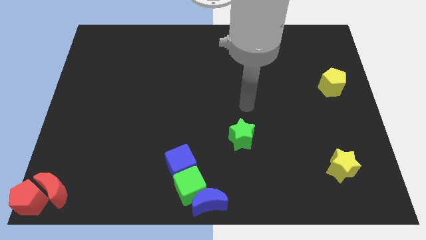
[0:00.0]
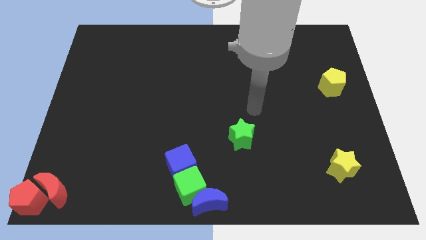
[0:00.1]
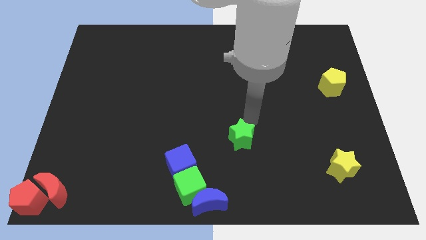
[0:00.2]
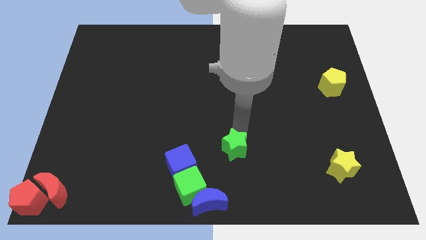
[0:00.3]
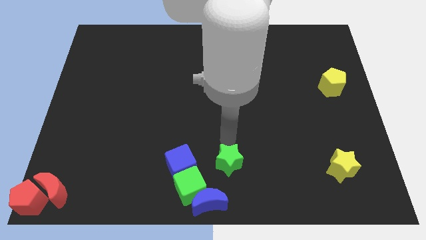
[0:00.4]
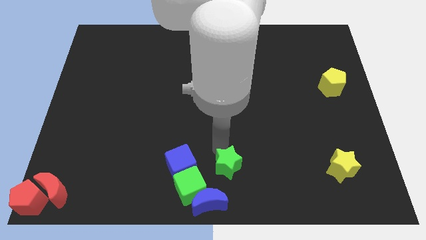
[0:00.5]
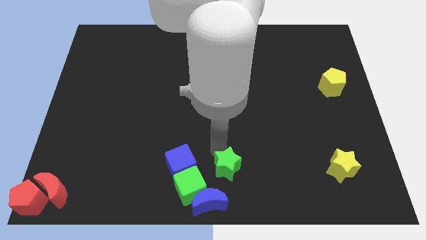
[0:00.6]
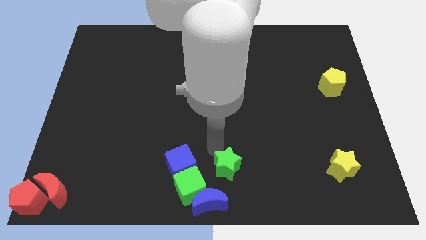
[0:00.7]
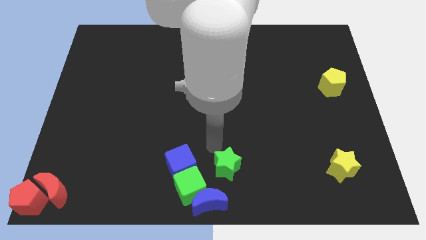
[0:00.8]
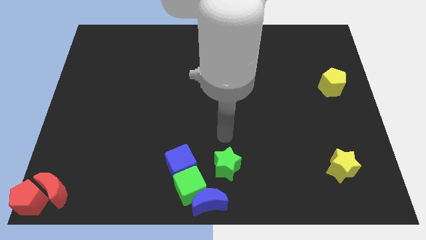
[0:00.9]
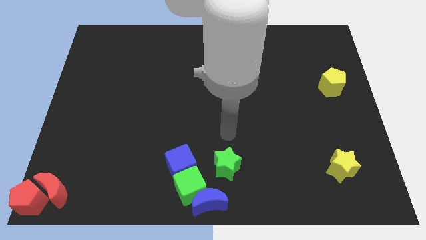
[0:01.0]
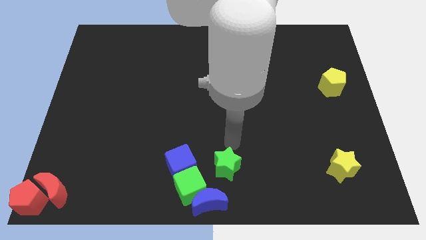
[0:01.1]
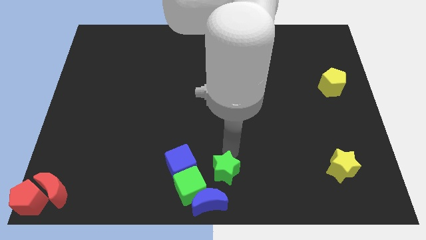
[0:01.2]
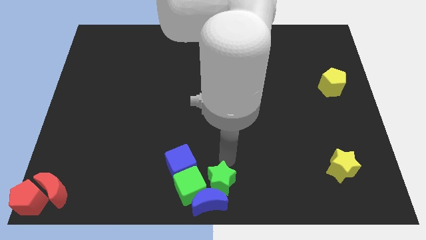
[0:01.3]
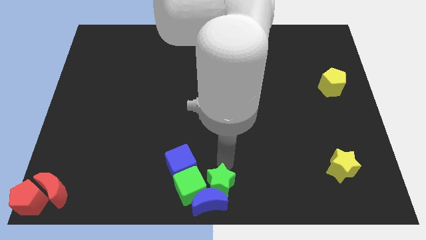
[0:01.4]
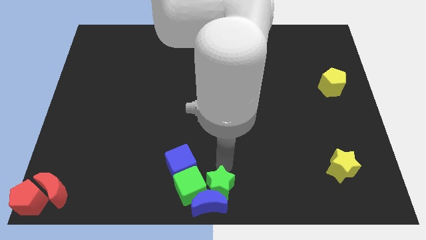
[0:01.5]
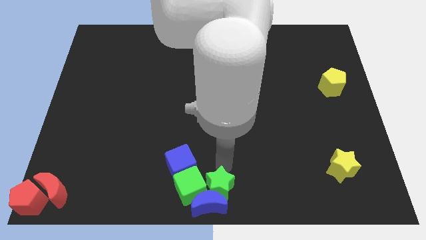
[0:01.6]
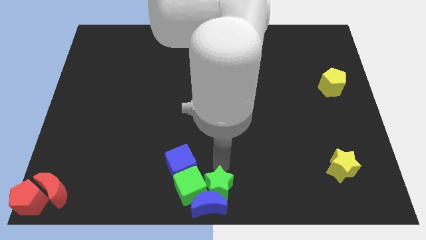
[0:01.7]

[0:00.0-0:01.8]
push the green star into the group of blocks

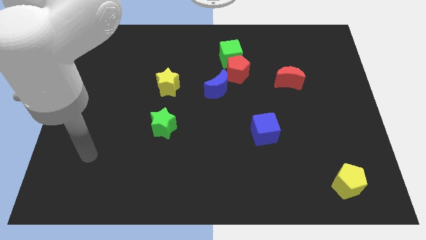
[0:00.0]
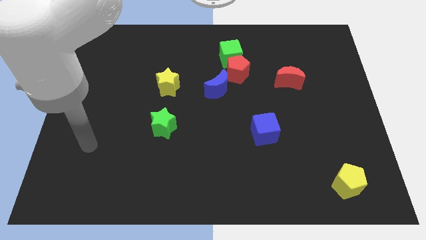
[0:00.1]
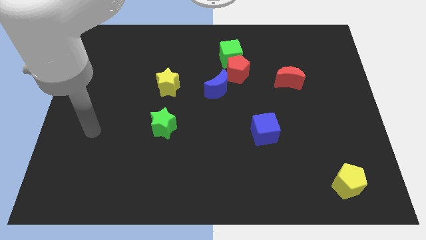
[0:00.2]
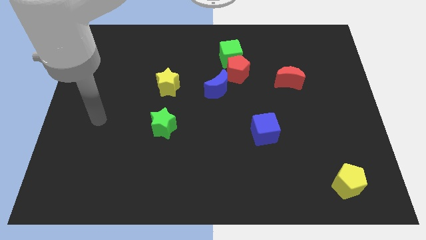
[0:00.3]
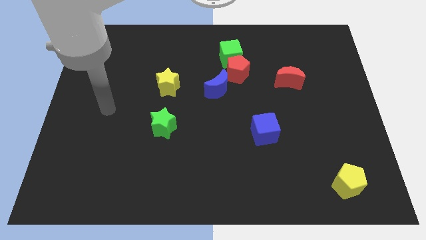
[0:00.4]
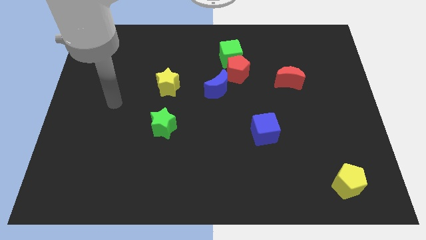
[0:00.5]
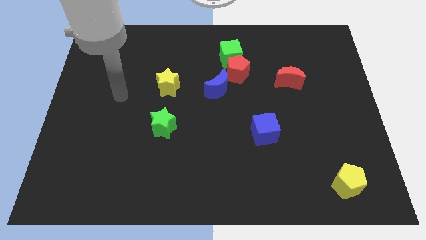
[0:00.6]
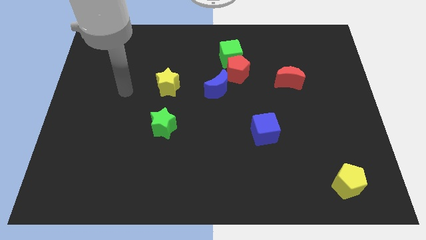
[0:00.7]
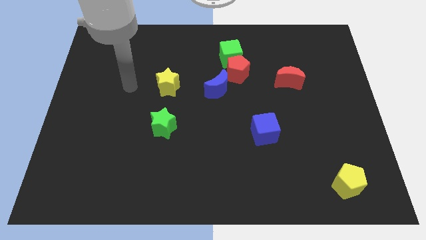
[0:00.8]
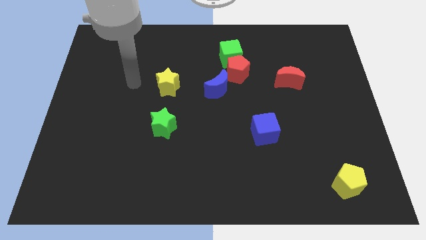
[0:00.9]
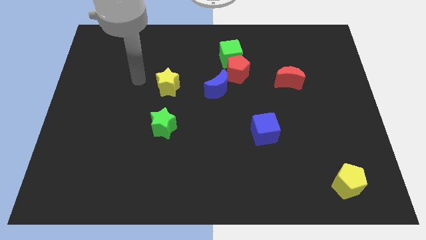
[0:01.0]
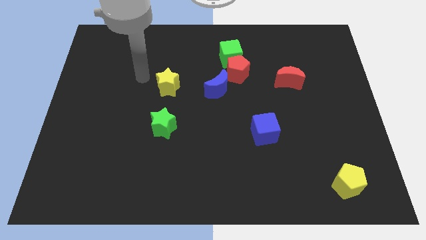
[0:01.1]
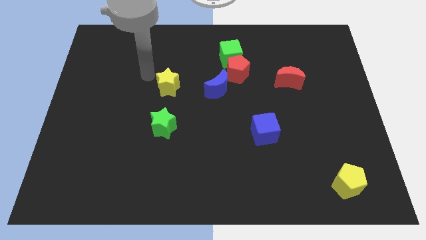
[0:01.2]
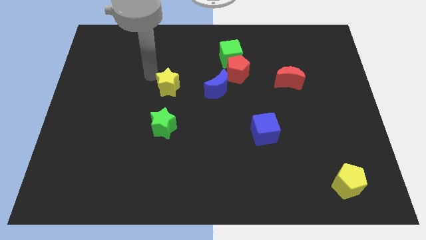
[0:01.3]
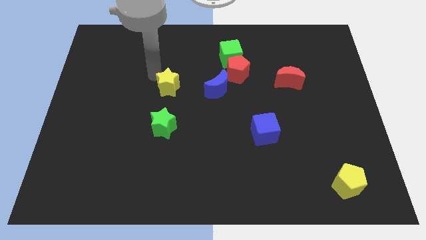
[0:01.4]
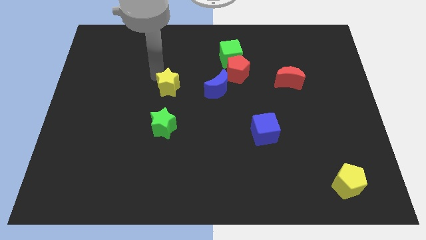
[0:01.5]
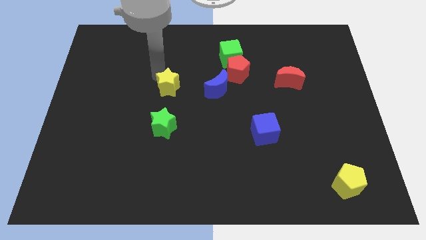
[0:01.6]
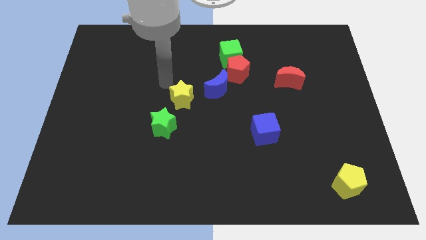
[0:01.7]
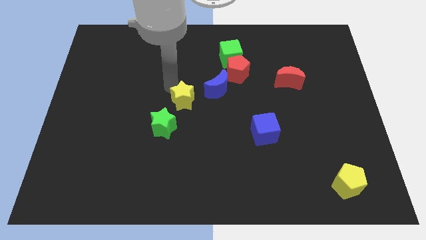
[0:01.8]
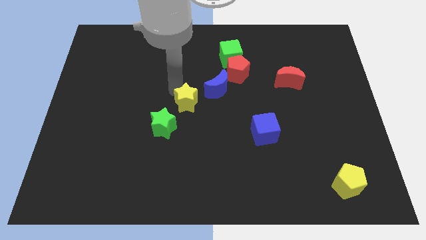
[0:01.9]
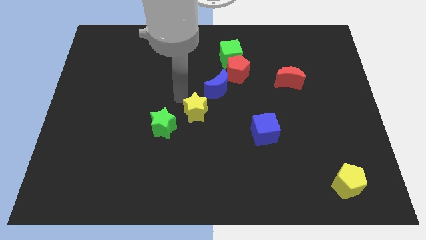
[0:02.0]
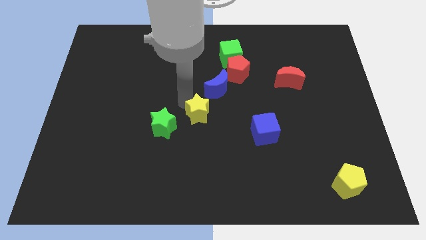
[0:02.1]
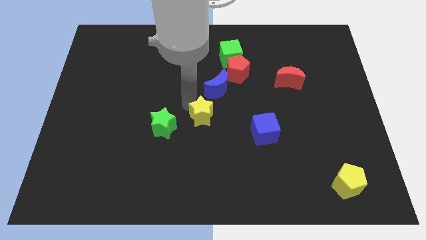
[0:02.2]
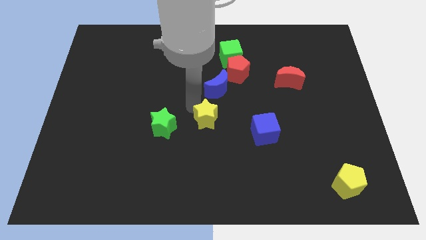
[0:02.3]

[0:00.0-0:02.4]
move the yellow star in between the green star and the blue cube

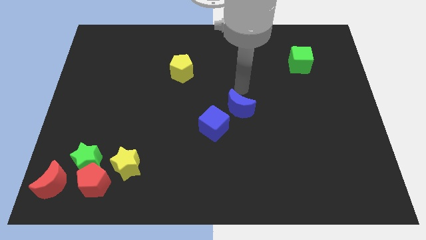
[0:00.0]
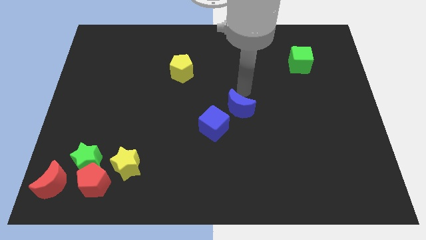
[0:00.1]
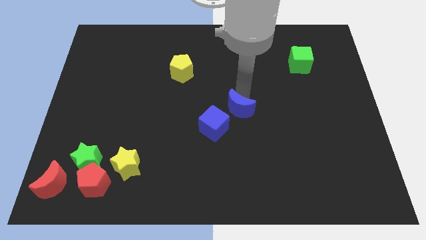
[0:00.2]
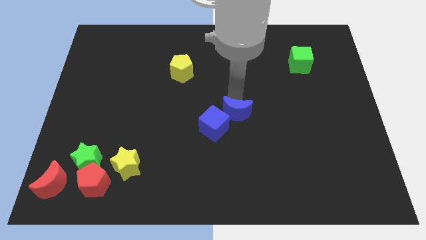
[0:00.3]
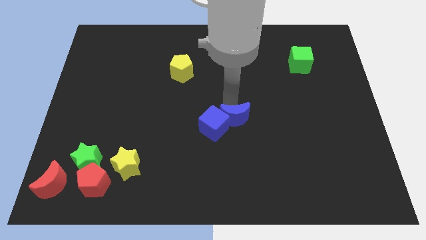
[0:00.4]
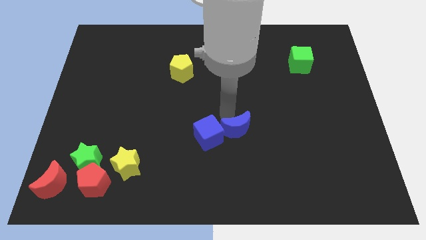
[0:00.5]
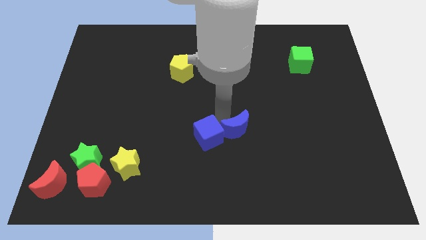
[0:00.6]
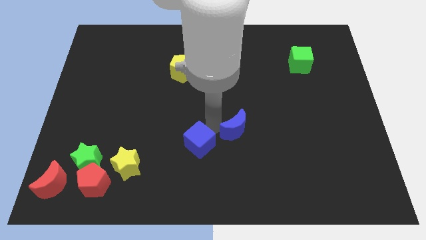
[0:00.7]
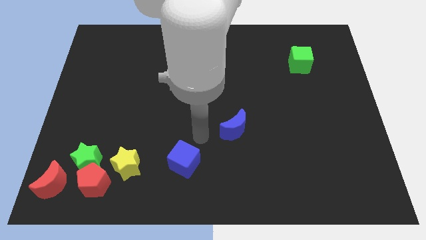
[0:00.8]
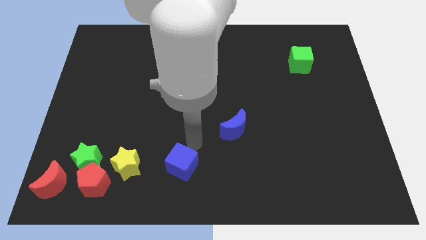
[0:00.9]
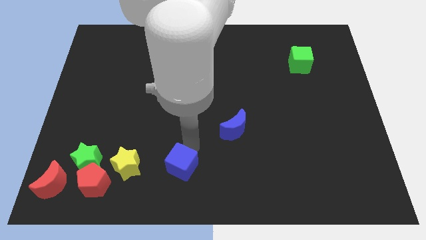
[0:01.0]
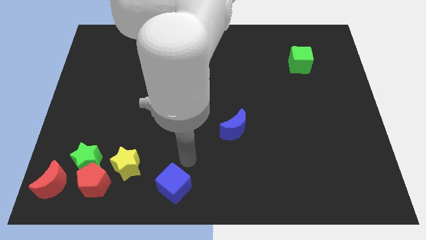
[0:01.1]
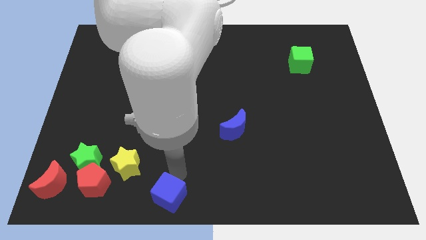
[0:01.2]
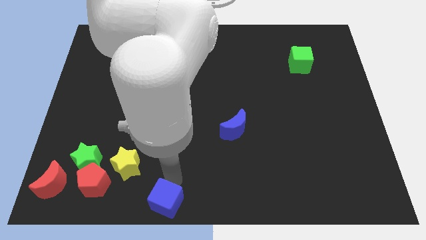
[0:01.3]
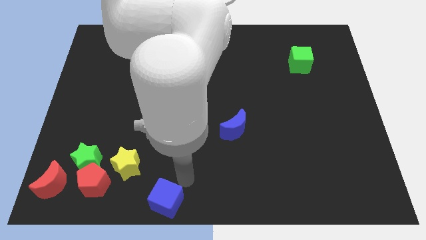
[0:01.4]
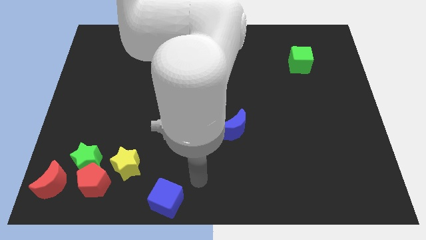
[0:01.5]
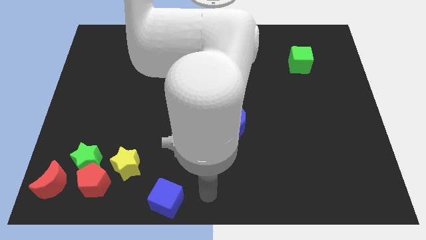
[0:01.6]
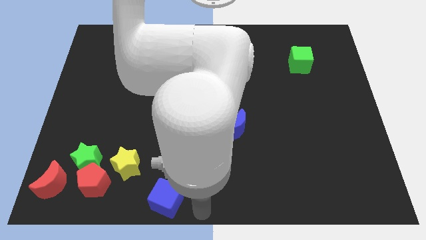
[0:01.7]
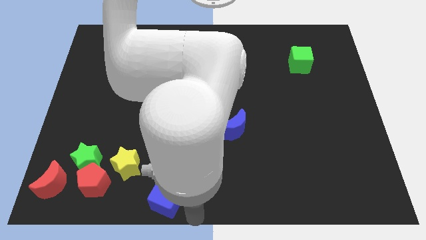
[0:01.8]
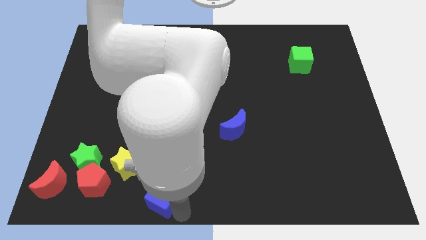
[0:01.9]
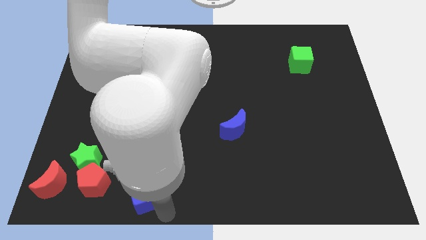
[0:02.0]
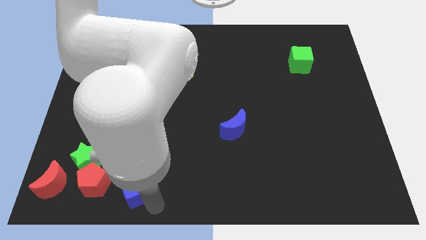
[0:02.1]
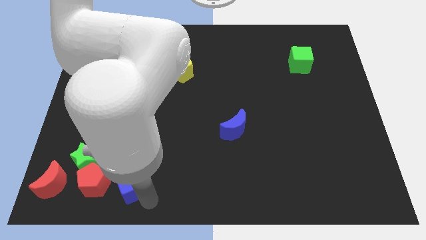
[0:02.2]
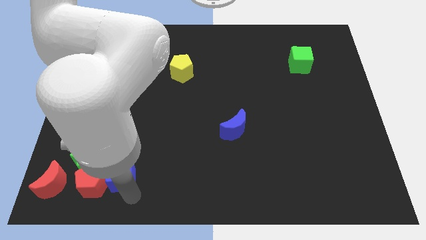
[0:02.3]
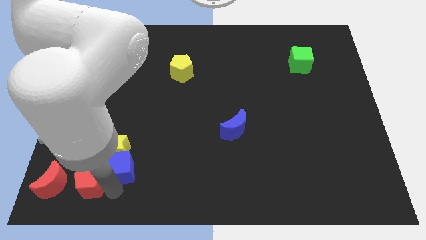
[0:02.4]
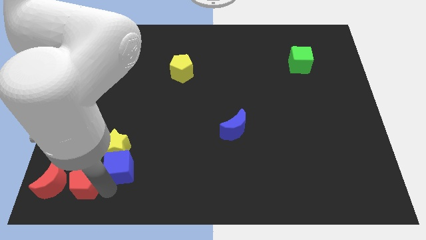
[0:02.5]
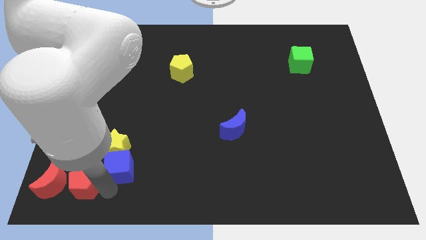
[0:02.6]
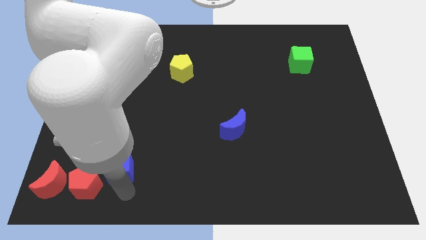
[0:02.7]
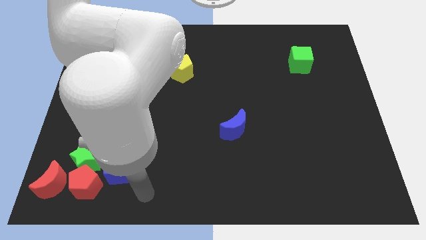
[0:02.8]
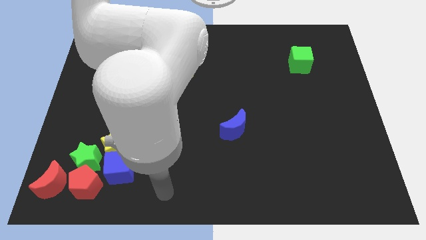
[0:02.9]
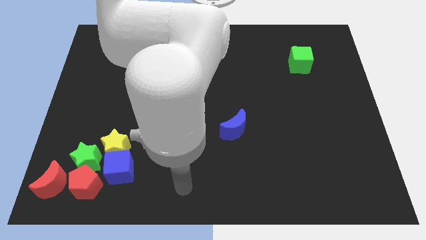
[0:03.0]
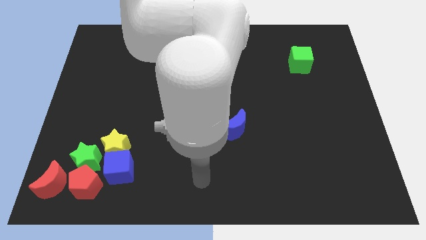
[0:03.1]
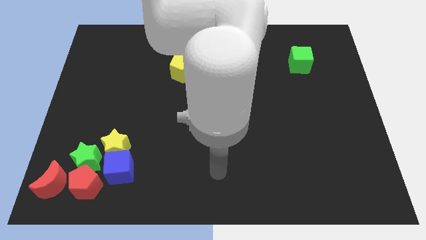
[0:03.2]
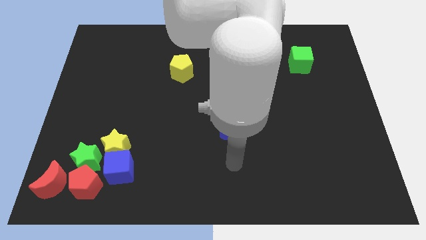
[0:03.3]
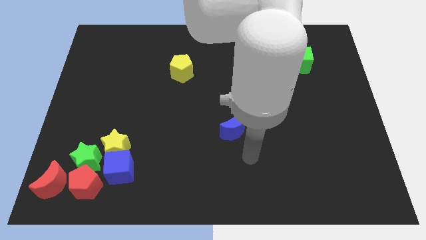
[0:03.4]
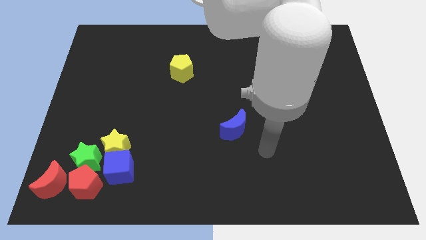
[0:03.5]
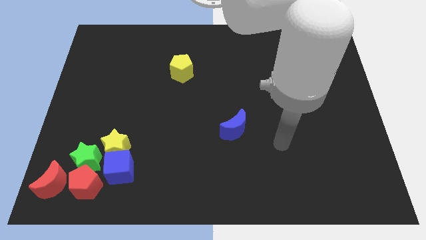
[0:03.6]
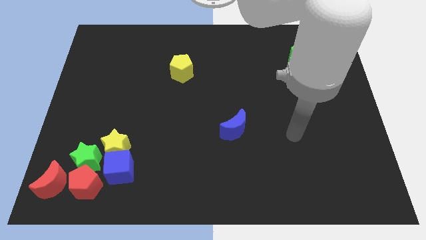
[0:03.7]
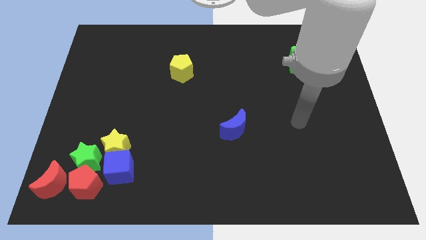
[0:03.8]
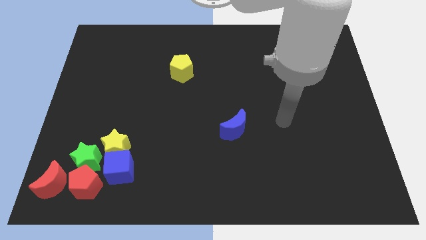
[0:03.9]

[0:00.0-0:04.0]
move the blue cube below to the yellow star

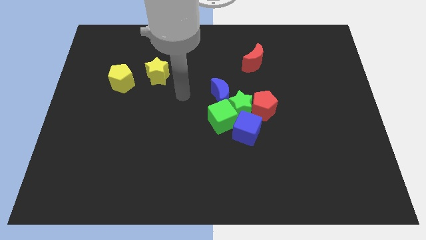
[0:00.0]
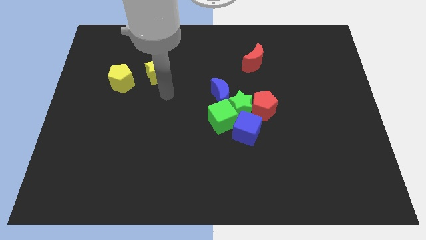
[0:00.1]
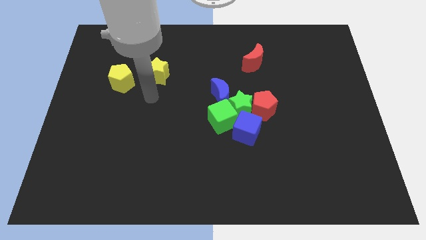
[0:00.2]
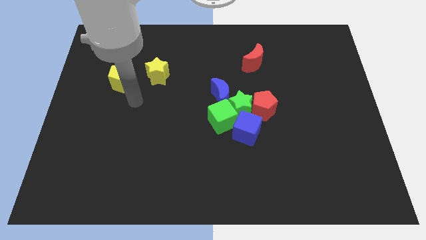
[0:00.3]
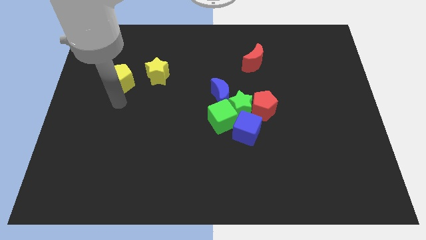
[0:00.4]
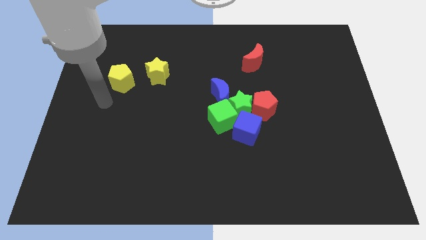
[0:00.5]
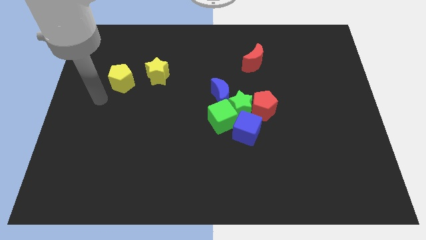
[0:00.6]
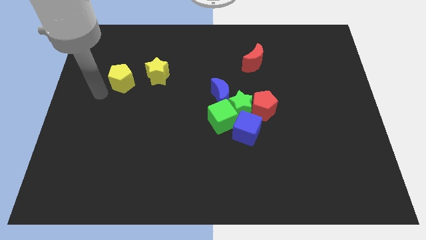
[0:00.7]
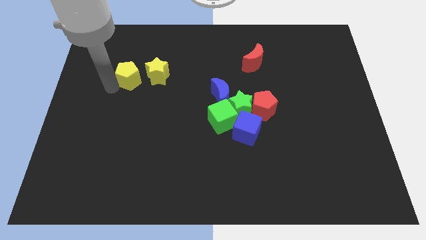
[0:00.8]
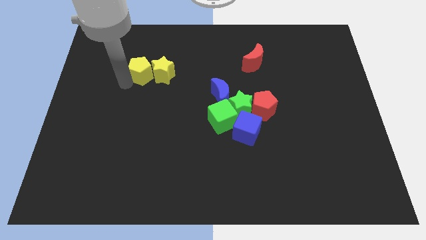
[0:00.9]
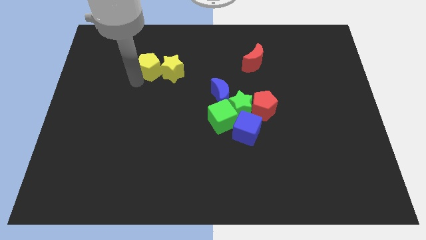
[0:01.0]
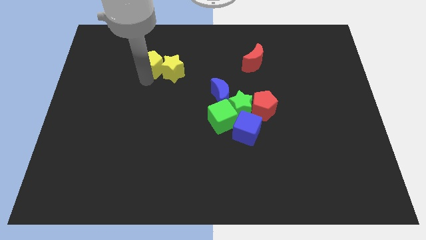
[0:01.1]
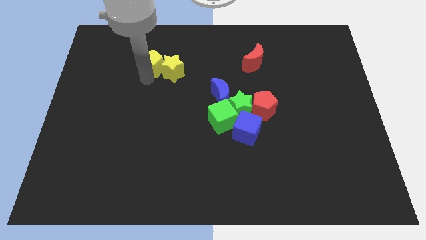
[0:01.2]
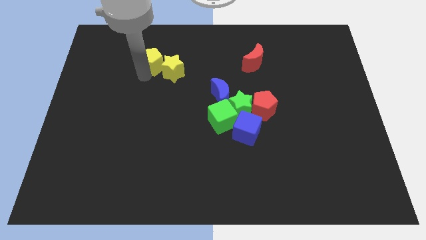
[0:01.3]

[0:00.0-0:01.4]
push the yellow pentagon into the yellow star
